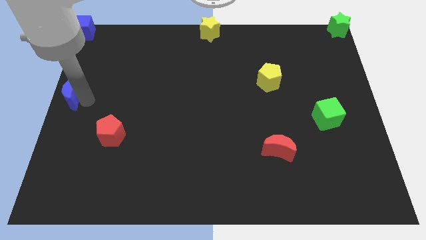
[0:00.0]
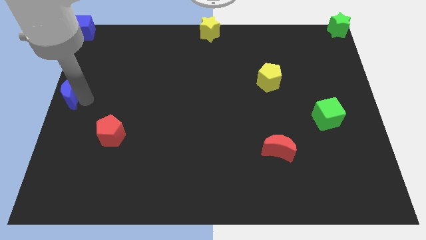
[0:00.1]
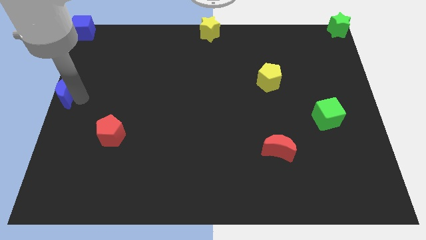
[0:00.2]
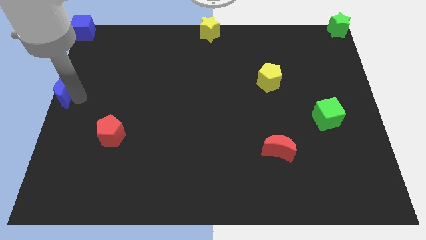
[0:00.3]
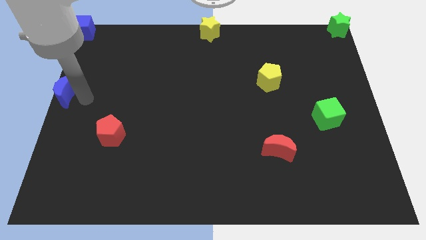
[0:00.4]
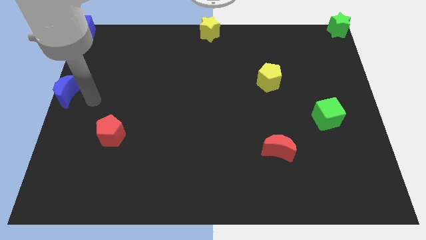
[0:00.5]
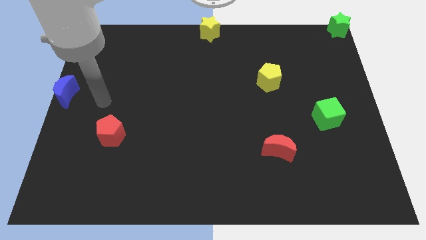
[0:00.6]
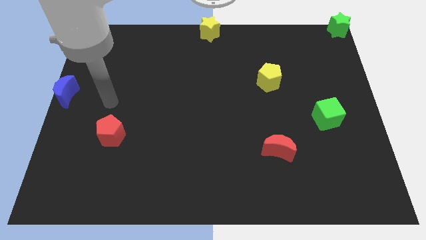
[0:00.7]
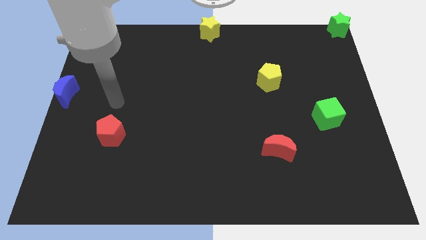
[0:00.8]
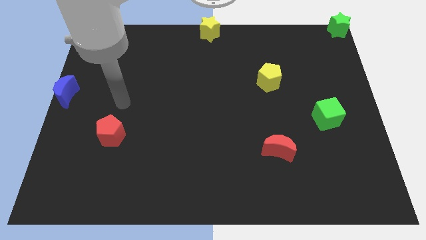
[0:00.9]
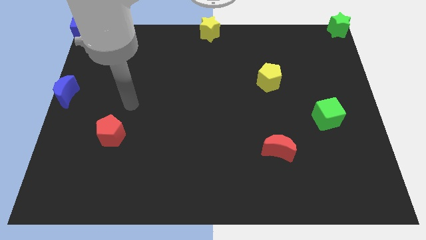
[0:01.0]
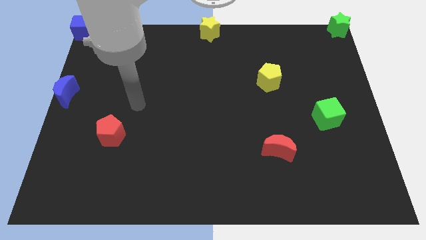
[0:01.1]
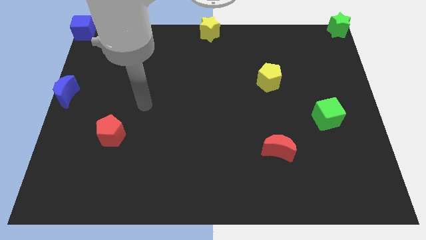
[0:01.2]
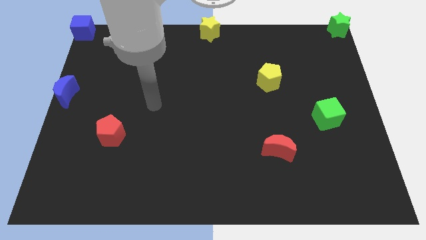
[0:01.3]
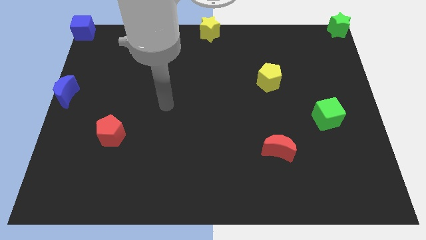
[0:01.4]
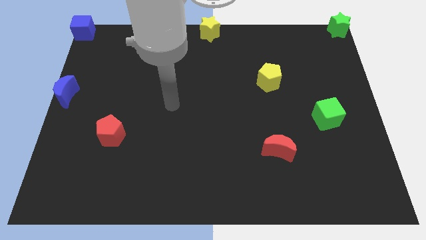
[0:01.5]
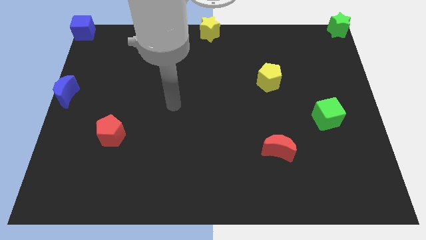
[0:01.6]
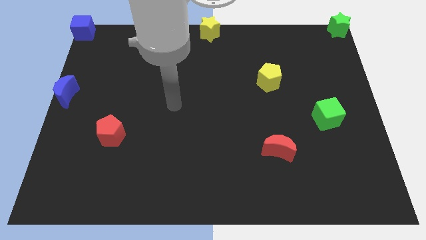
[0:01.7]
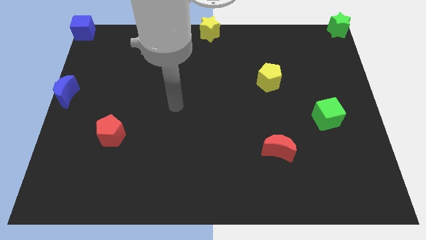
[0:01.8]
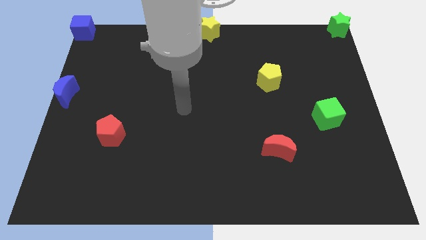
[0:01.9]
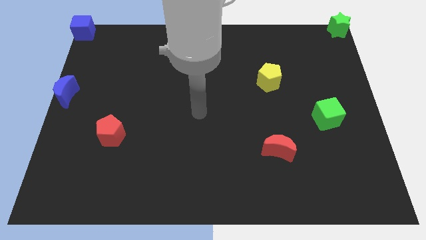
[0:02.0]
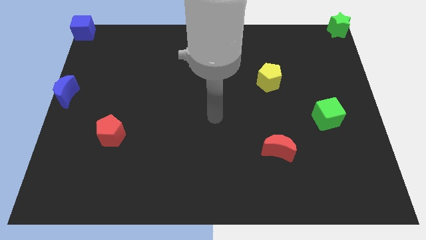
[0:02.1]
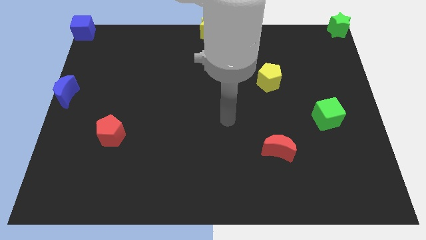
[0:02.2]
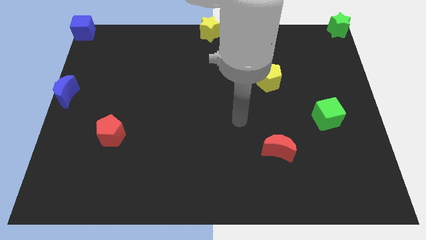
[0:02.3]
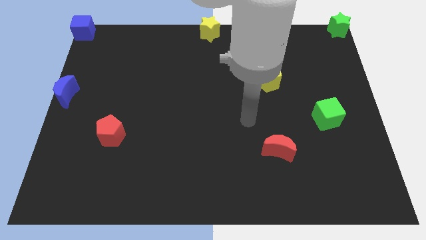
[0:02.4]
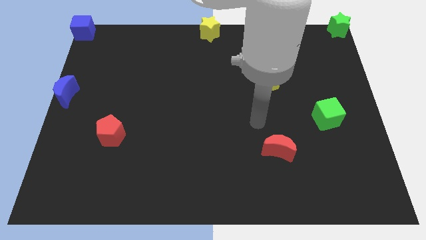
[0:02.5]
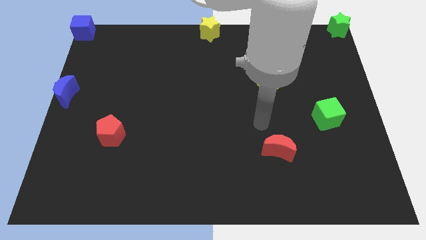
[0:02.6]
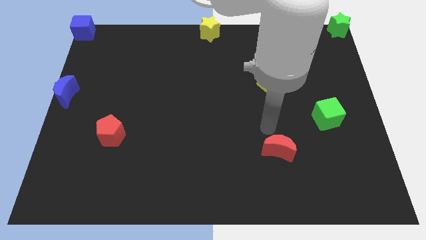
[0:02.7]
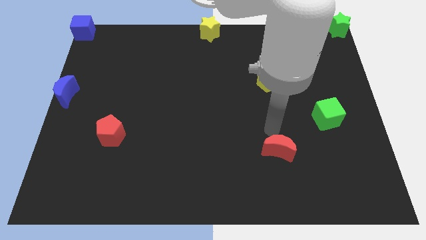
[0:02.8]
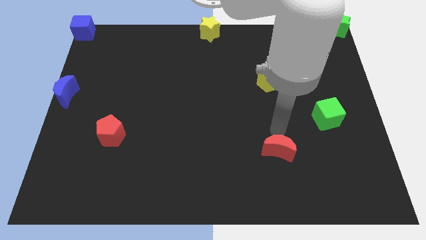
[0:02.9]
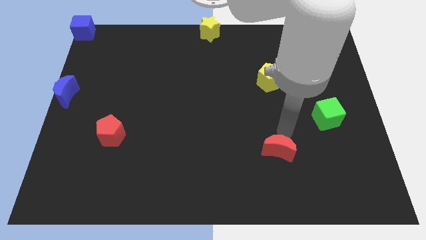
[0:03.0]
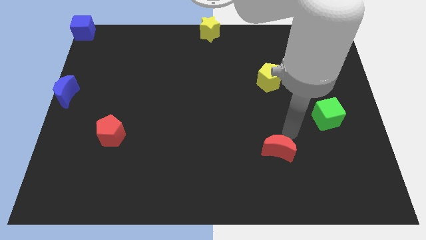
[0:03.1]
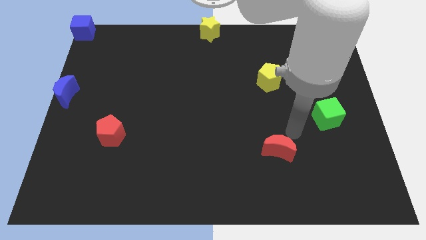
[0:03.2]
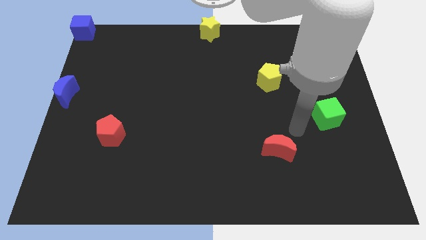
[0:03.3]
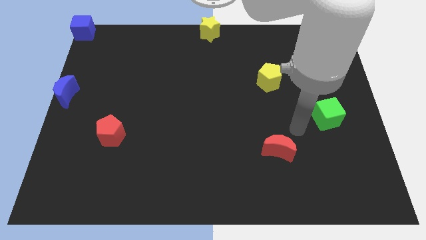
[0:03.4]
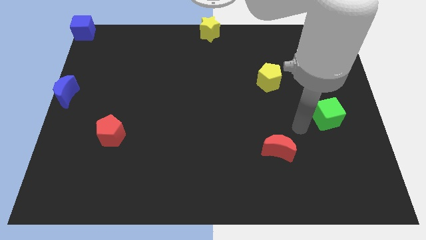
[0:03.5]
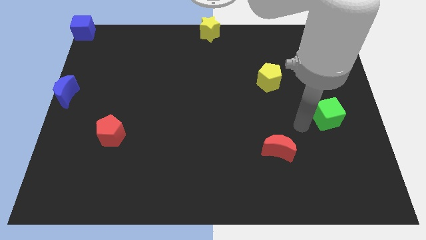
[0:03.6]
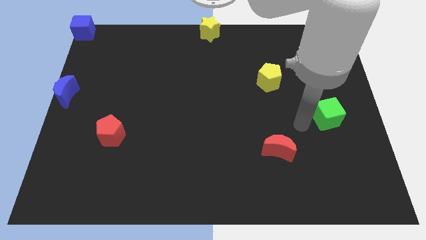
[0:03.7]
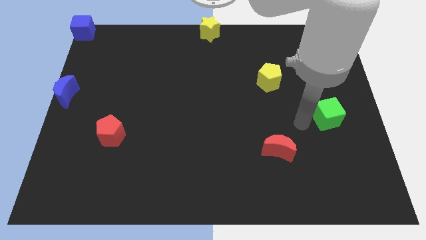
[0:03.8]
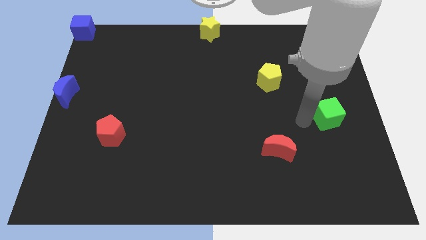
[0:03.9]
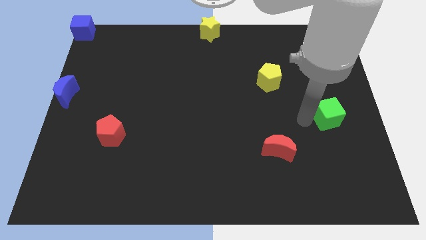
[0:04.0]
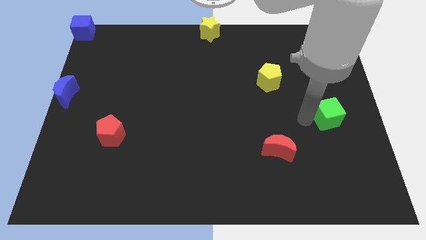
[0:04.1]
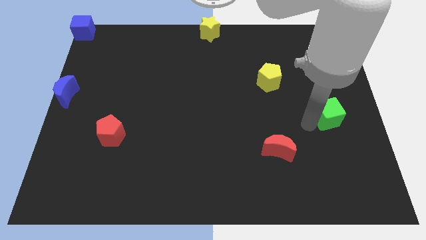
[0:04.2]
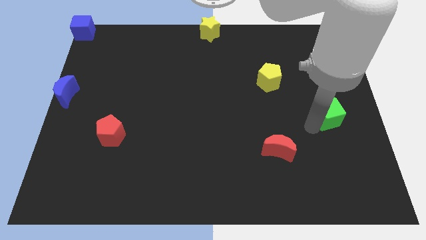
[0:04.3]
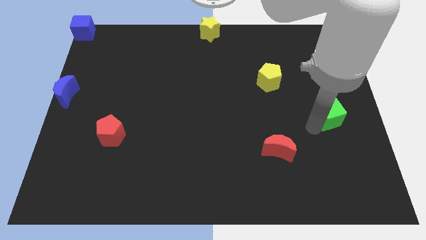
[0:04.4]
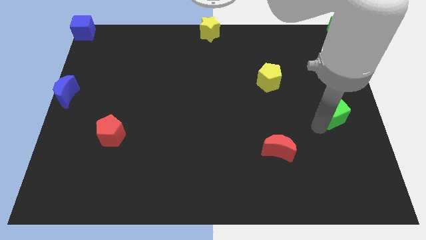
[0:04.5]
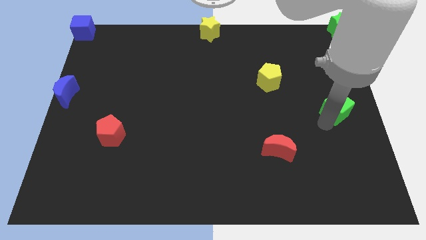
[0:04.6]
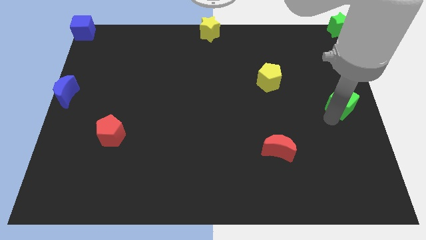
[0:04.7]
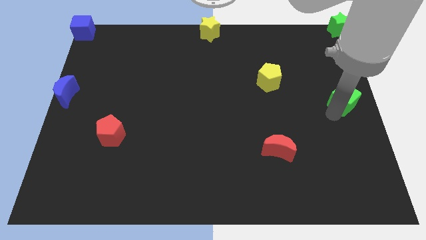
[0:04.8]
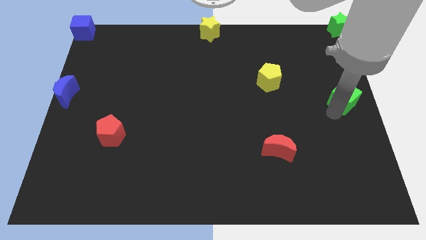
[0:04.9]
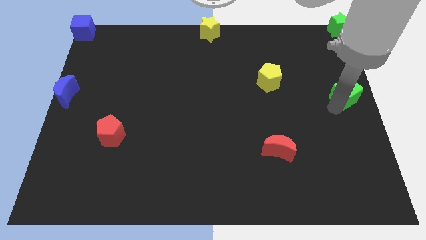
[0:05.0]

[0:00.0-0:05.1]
move the green cube towards the center right of the board

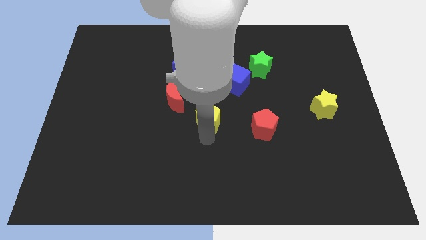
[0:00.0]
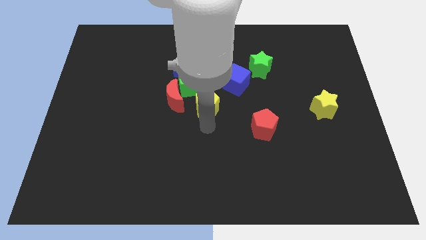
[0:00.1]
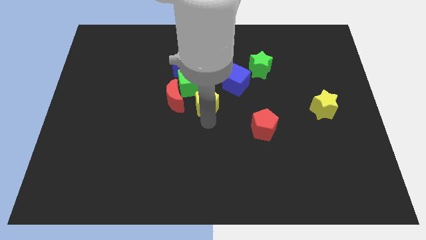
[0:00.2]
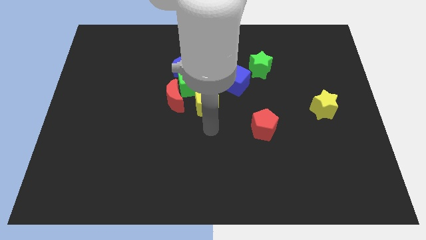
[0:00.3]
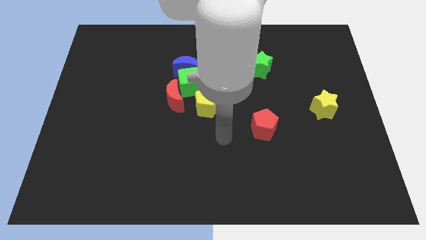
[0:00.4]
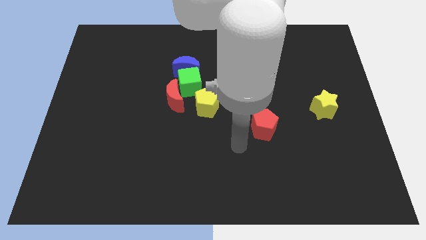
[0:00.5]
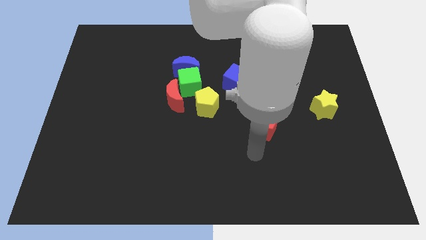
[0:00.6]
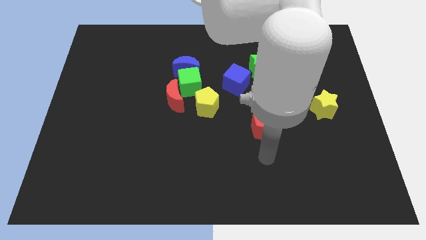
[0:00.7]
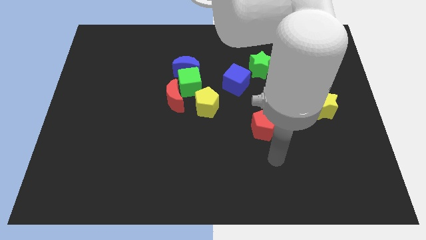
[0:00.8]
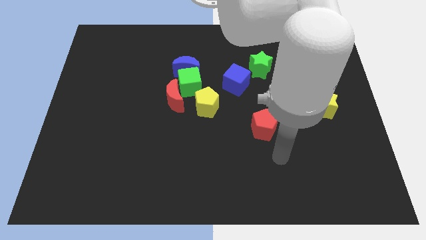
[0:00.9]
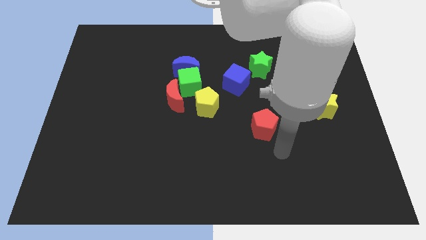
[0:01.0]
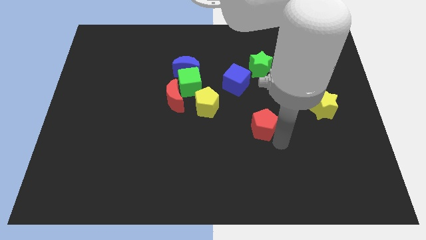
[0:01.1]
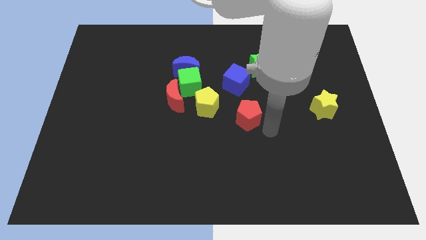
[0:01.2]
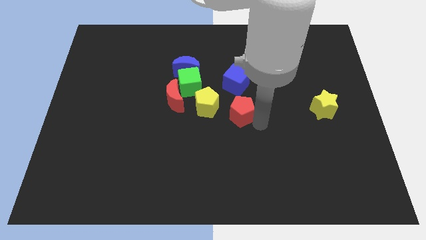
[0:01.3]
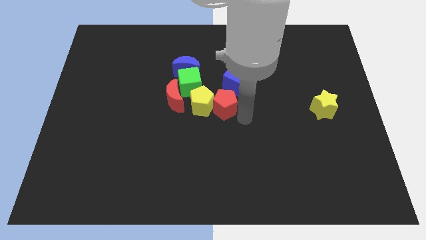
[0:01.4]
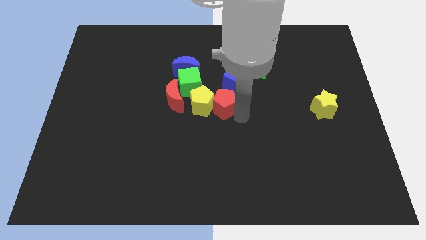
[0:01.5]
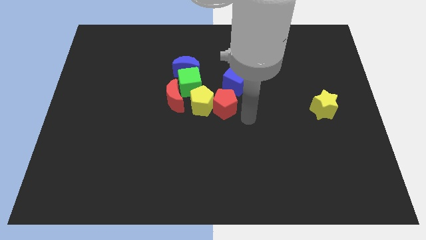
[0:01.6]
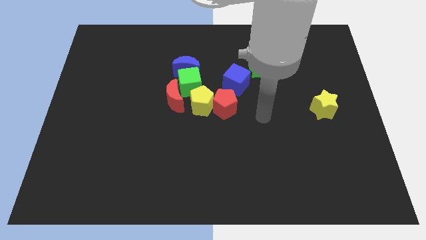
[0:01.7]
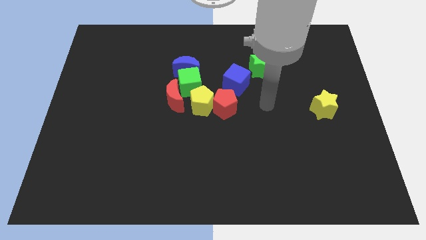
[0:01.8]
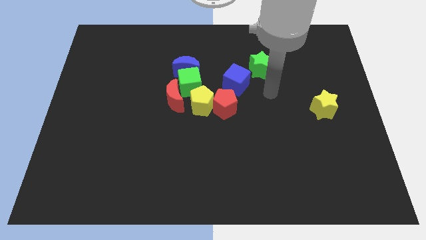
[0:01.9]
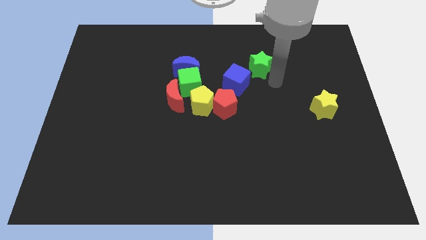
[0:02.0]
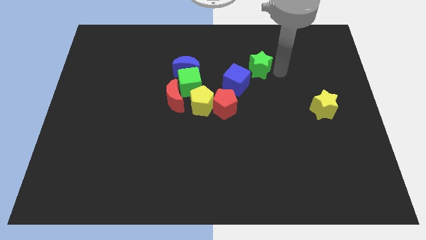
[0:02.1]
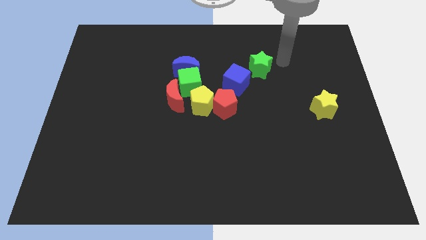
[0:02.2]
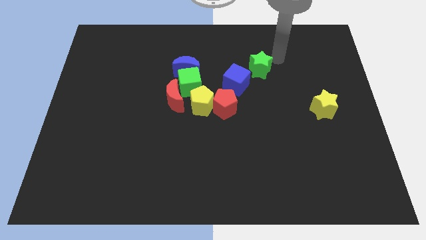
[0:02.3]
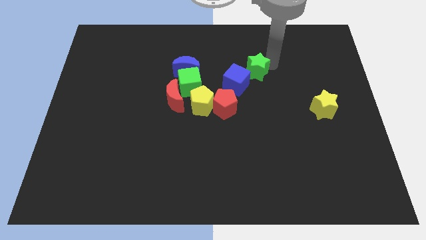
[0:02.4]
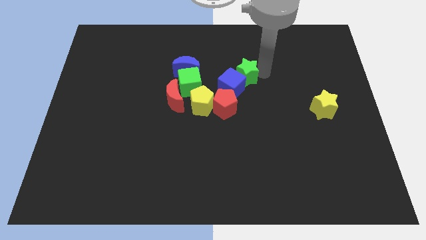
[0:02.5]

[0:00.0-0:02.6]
slide the red pentagon to the right of the yellow pentagon

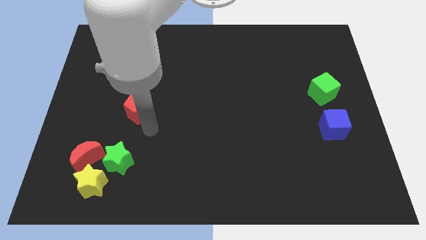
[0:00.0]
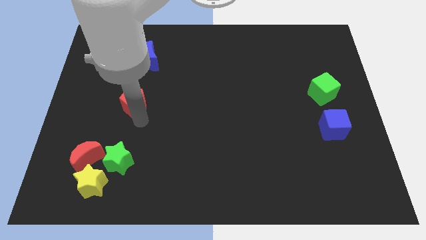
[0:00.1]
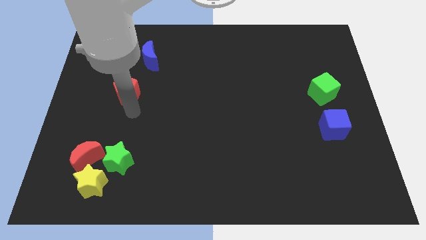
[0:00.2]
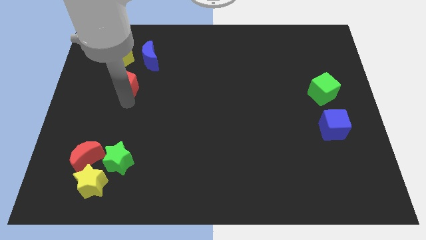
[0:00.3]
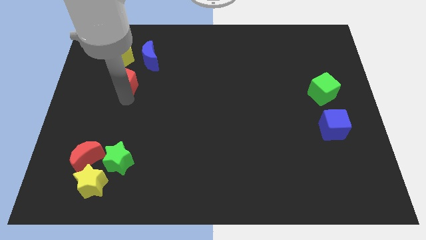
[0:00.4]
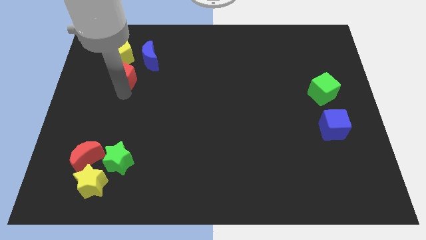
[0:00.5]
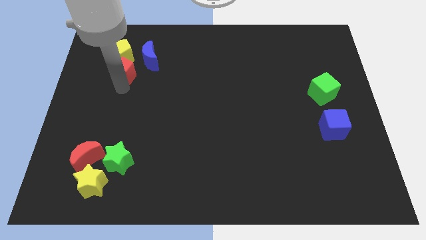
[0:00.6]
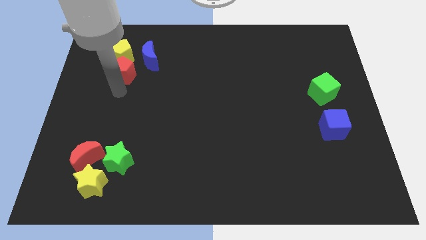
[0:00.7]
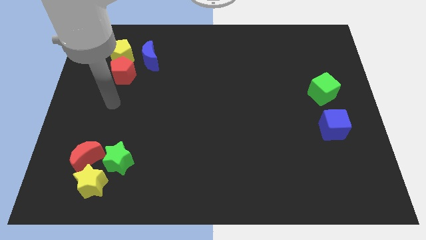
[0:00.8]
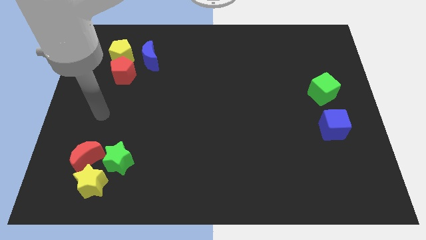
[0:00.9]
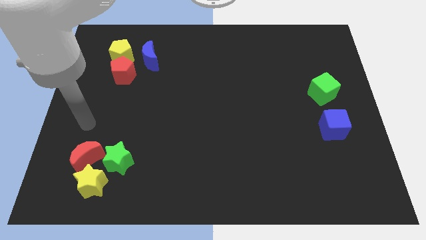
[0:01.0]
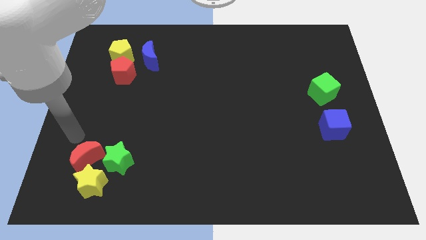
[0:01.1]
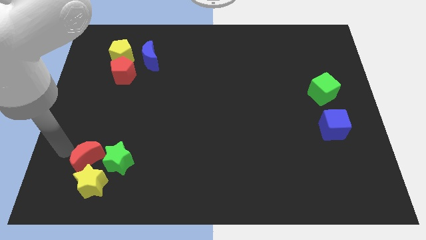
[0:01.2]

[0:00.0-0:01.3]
place the red pentagon below the yellow pentagon
